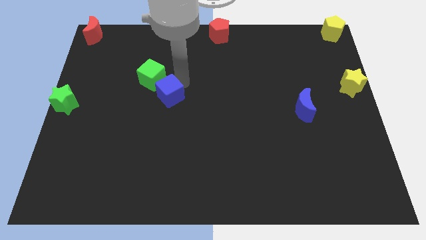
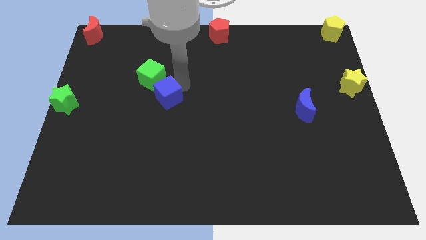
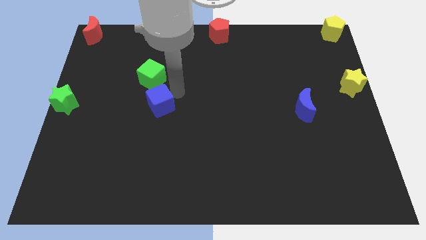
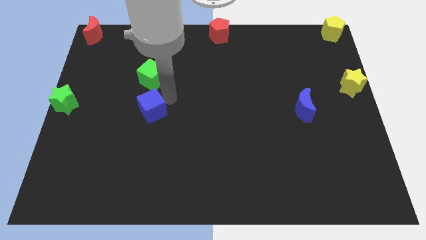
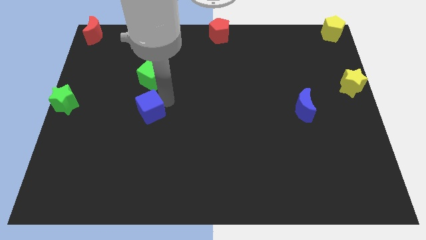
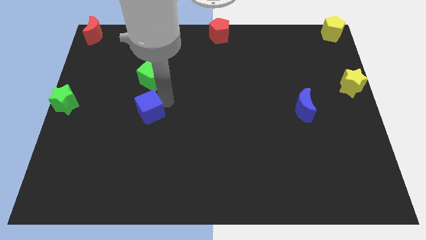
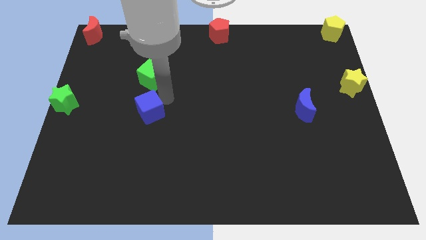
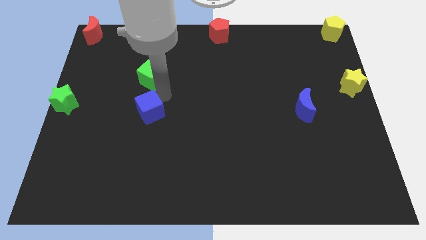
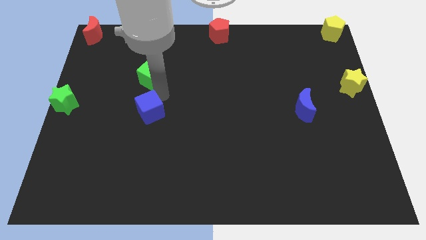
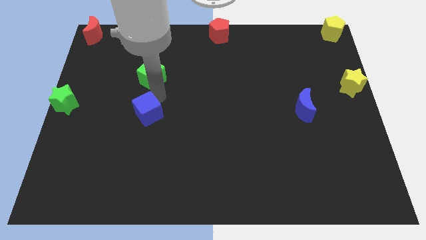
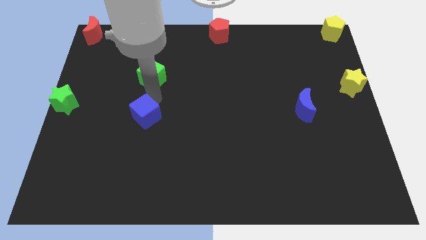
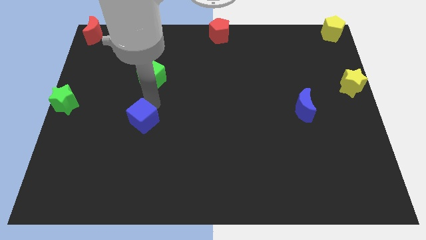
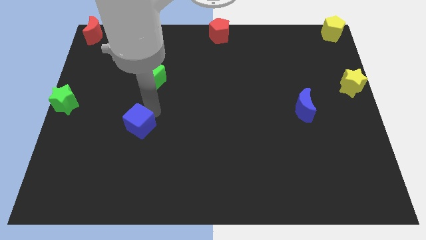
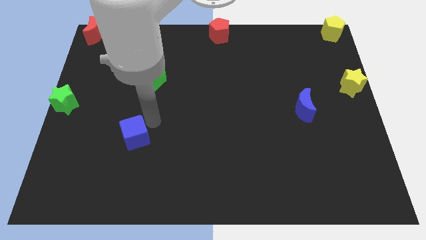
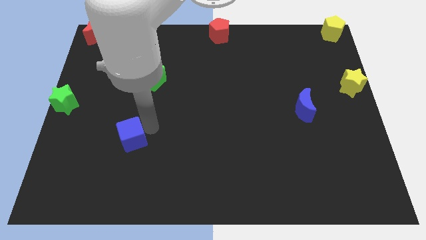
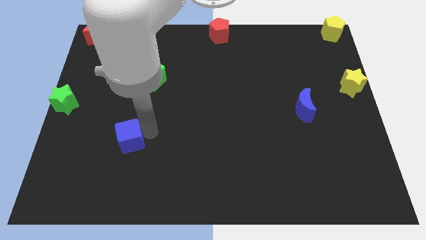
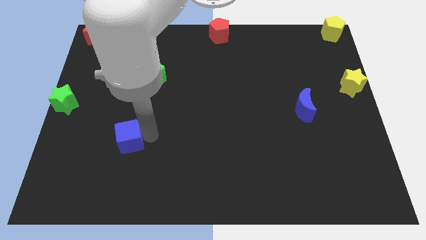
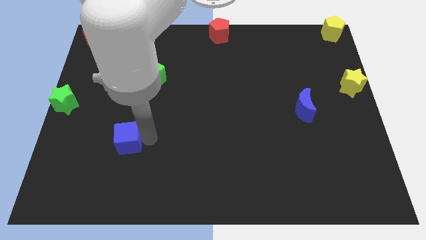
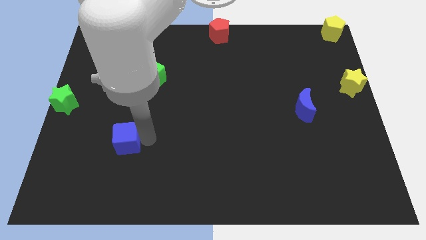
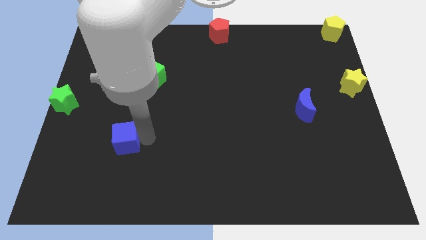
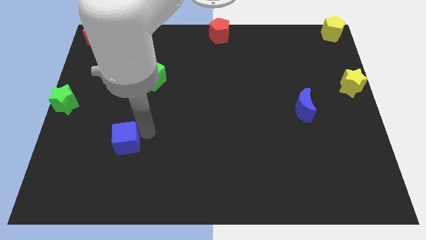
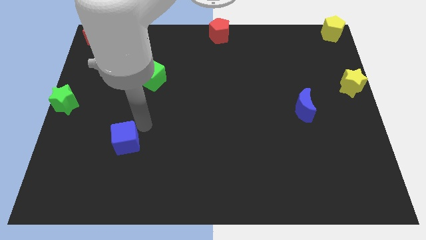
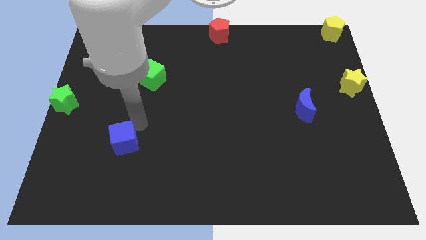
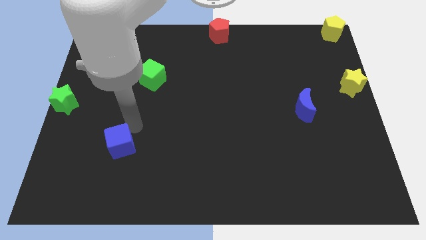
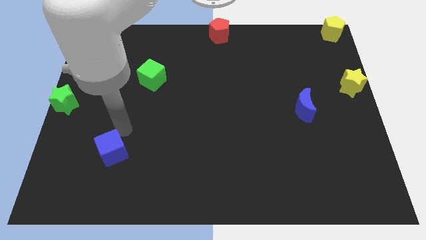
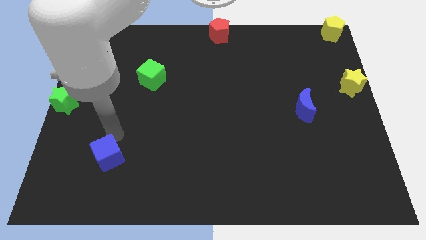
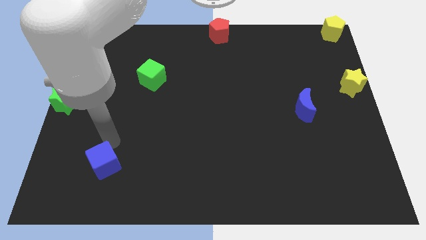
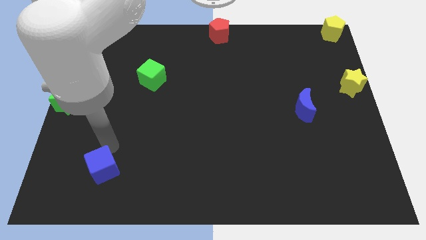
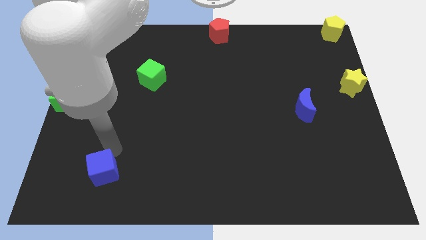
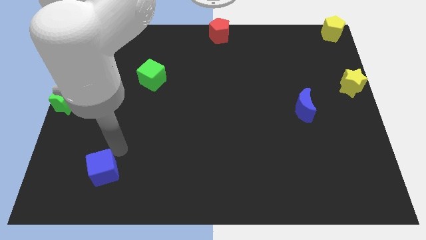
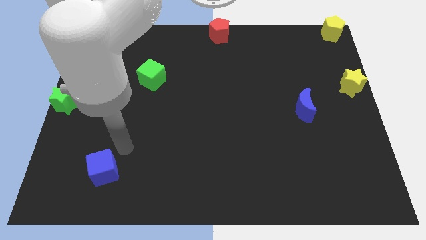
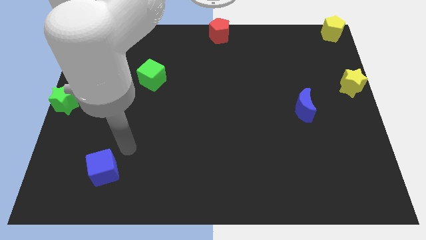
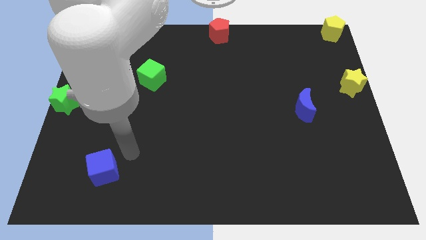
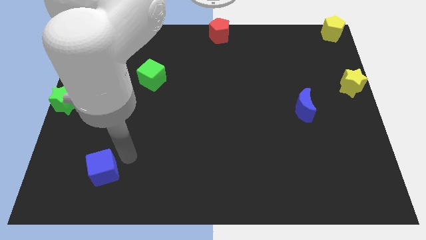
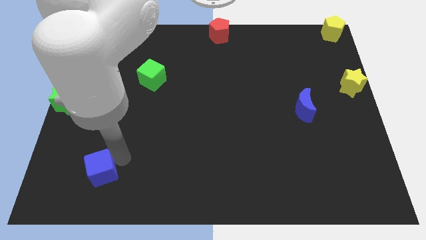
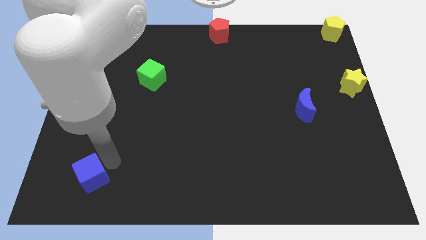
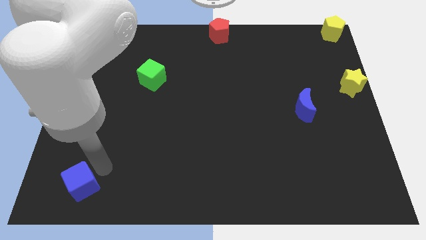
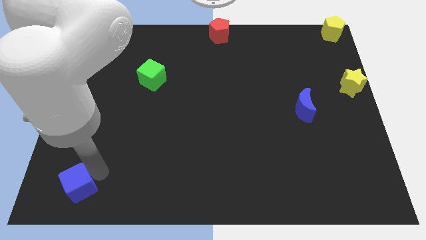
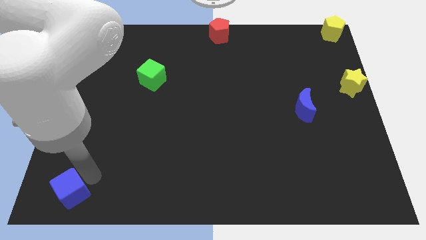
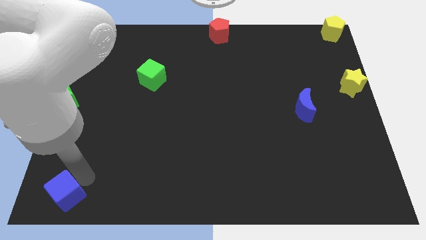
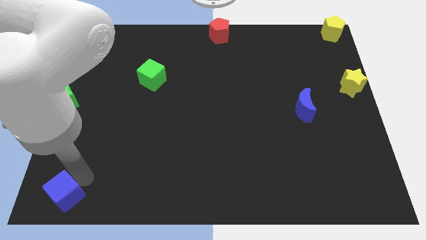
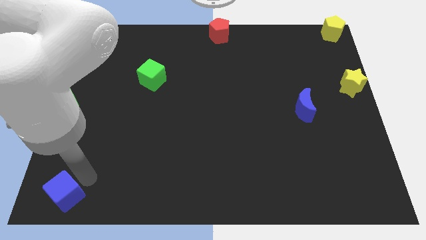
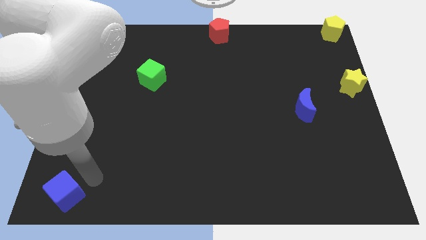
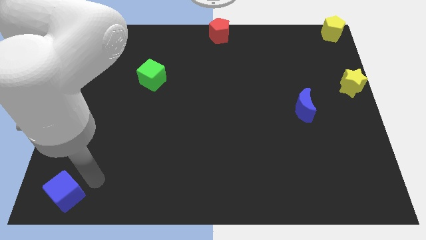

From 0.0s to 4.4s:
place the blue cube towards the bottom left corner of the board

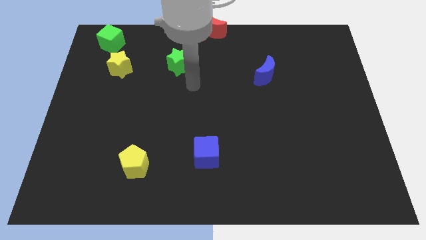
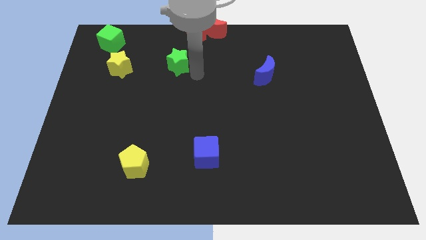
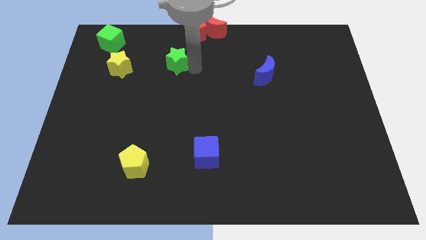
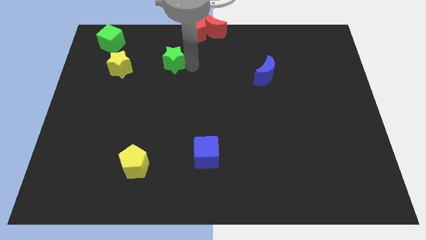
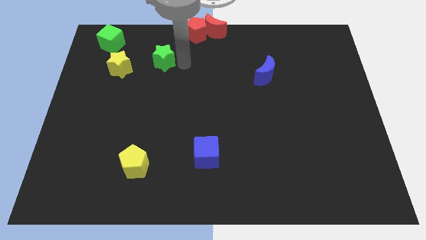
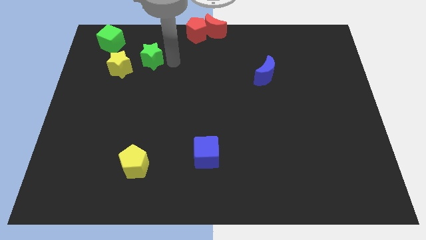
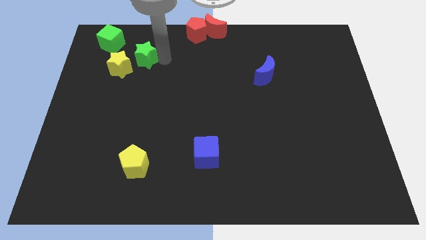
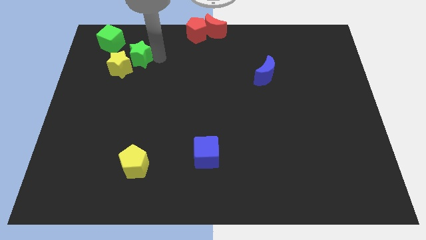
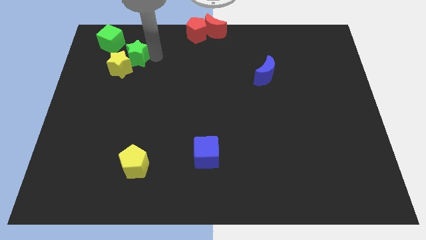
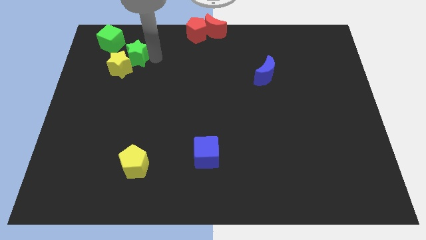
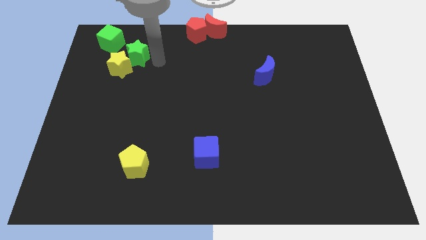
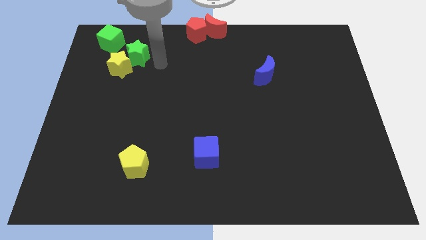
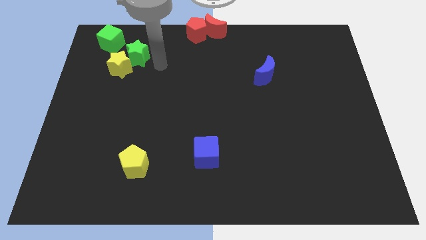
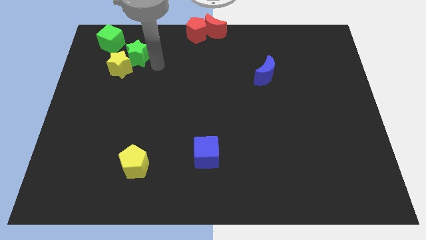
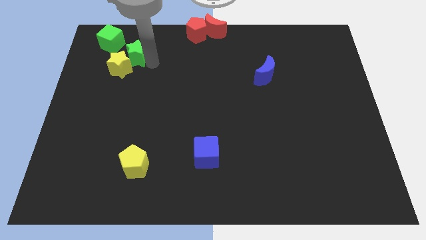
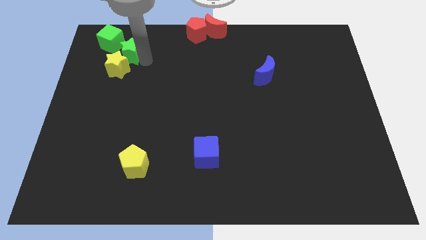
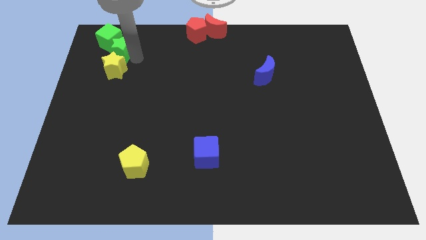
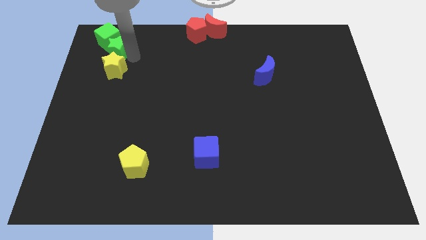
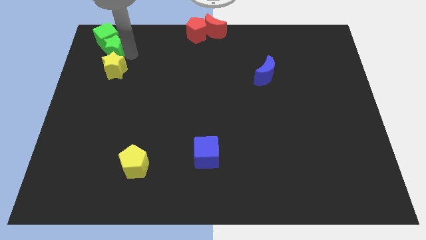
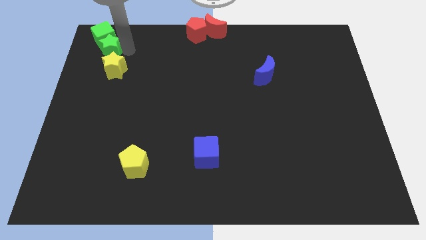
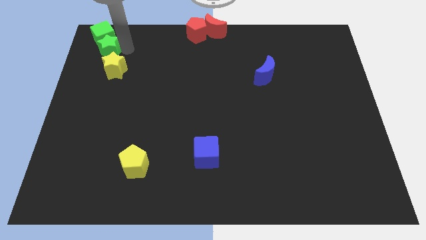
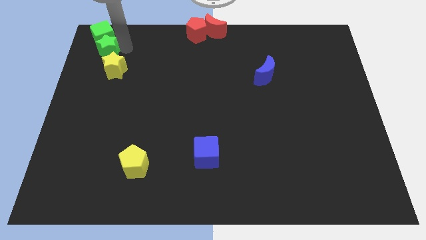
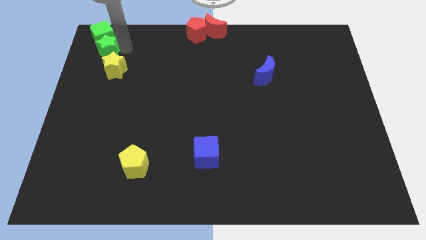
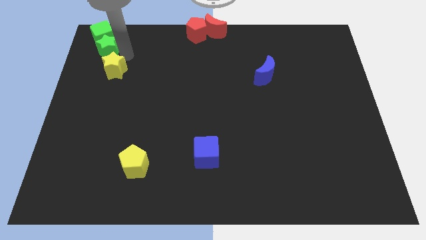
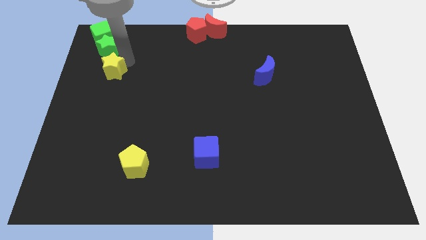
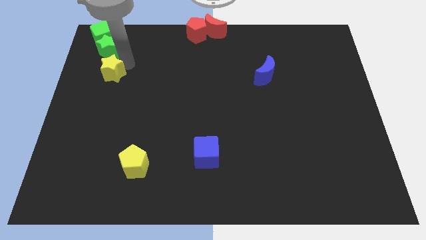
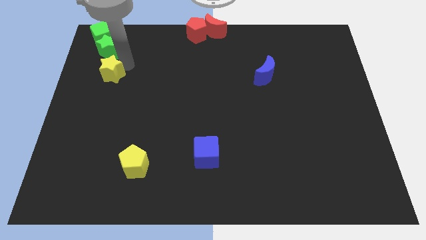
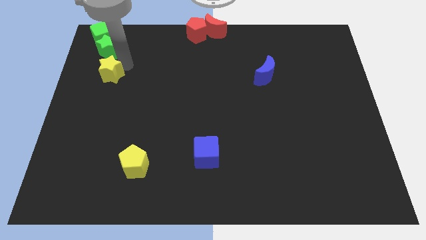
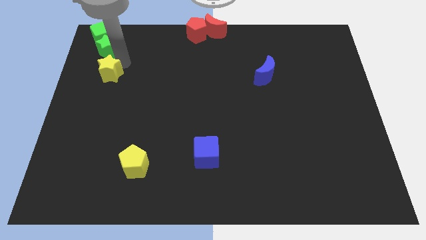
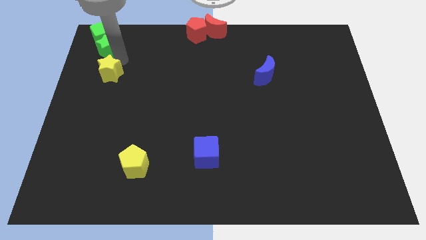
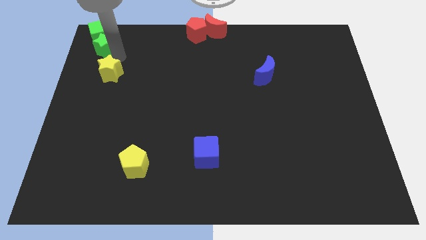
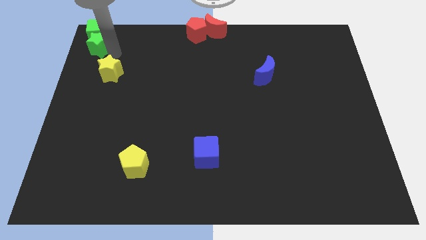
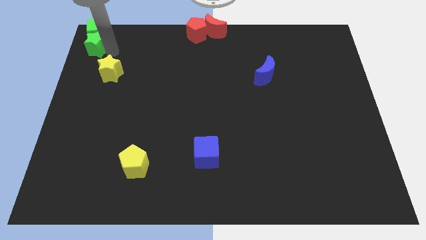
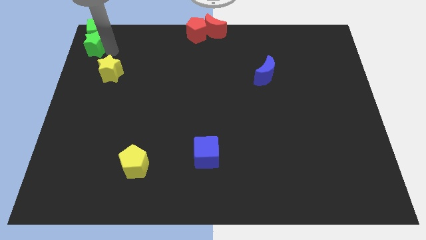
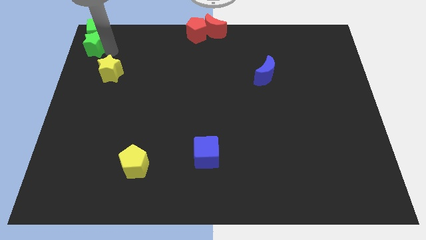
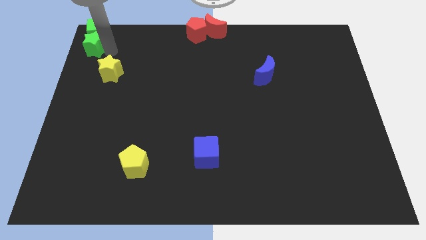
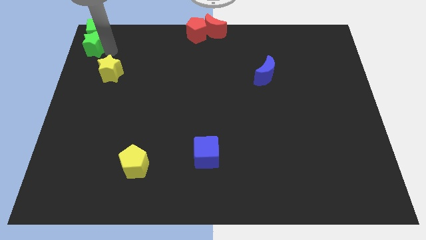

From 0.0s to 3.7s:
move green blocks to the top left of the board

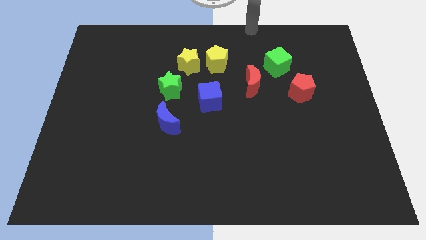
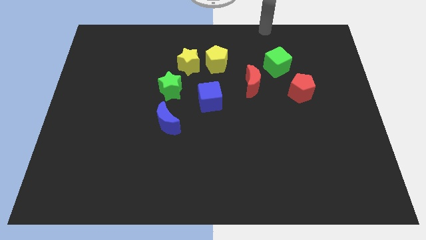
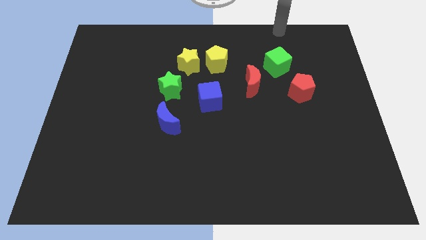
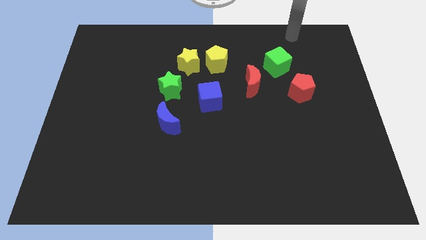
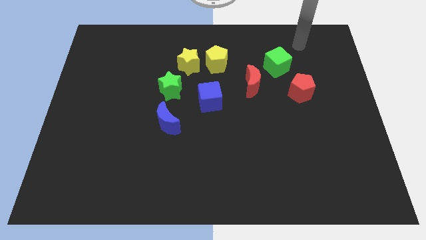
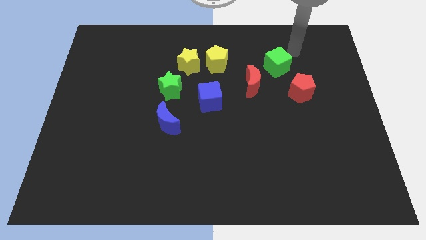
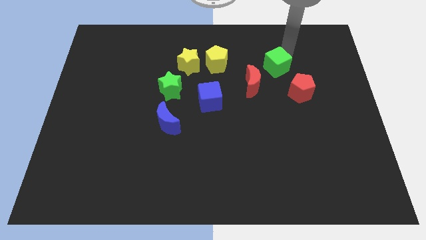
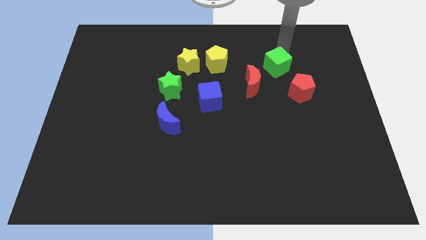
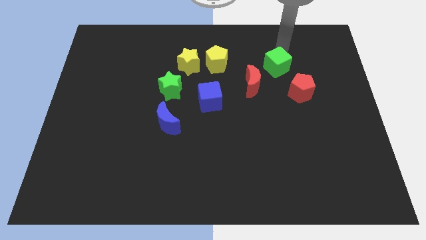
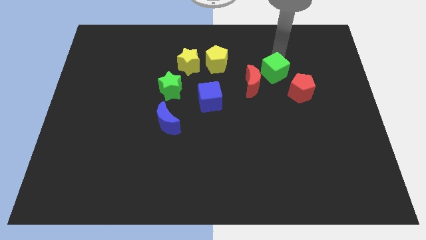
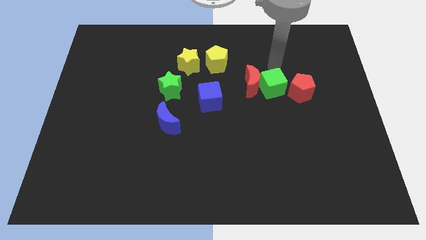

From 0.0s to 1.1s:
slide green cube in between red pentagon and red moon
